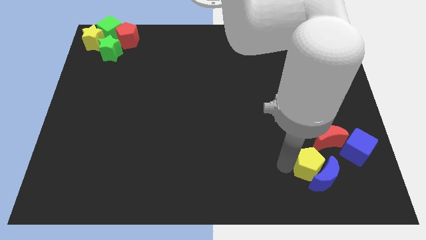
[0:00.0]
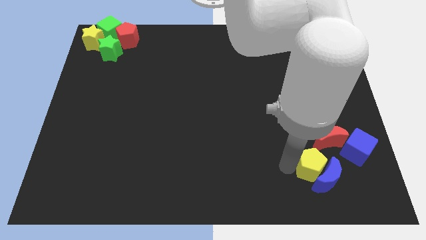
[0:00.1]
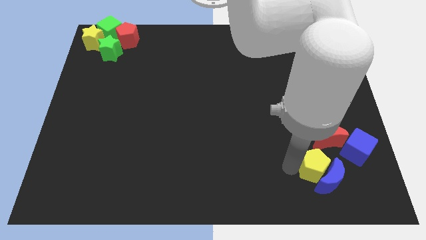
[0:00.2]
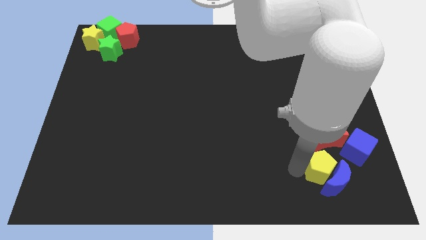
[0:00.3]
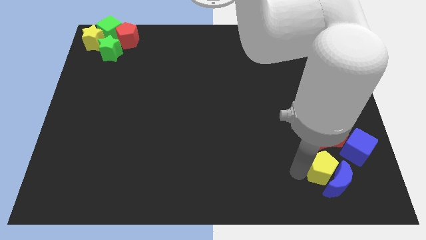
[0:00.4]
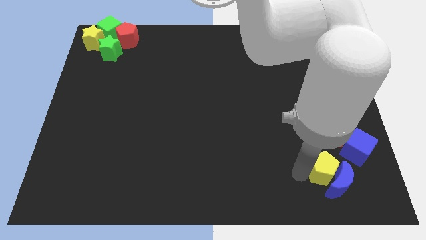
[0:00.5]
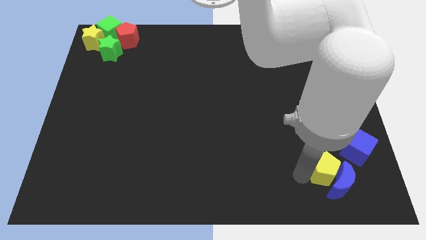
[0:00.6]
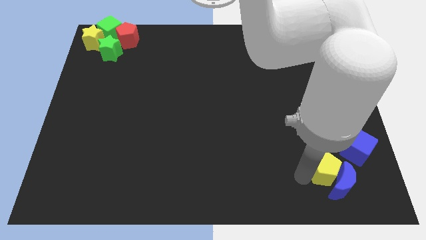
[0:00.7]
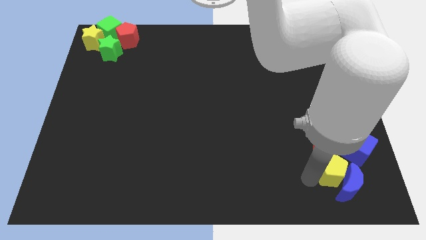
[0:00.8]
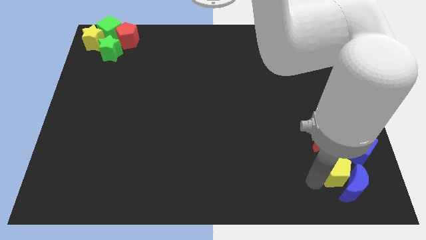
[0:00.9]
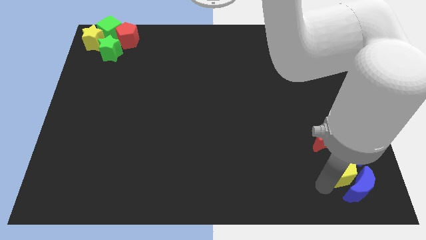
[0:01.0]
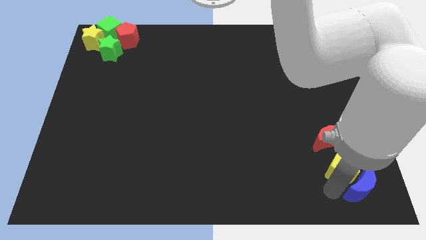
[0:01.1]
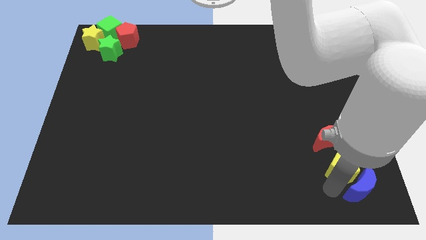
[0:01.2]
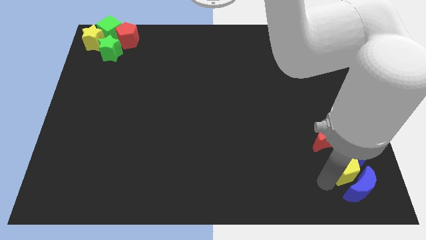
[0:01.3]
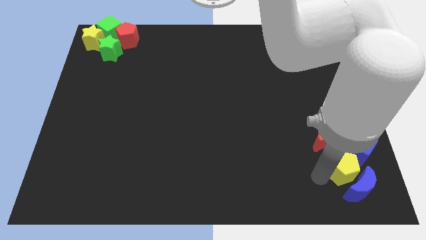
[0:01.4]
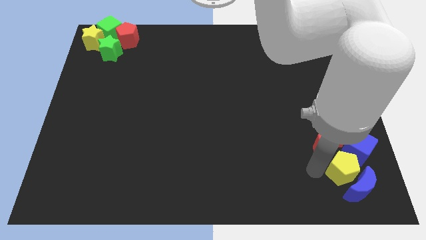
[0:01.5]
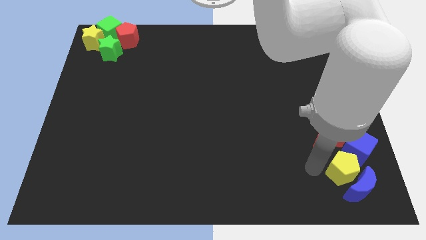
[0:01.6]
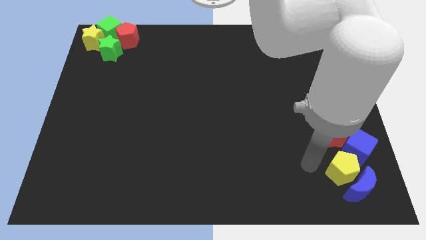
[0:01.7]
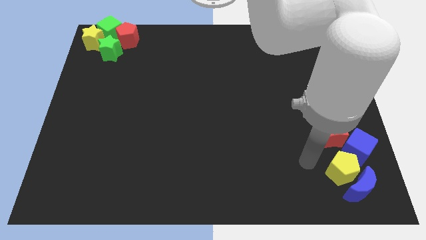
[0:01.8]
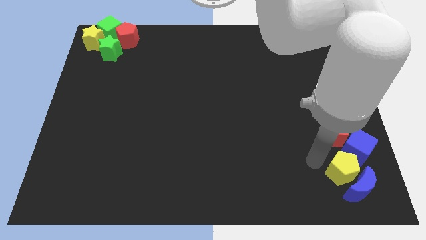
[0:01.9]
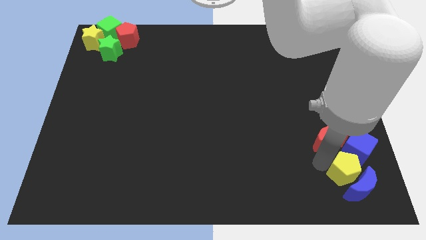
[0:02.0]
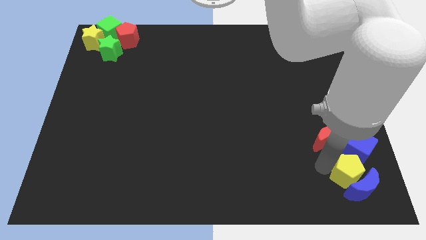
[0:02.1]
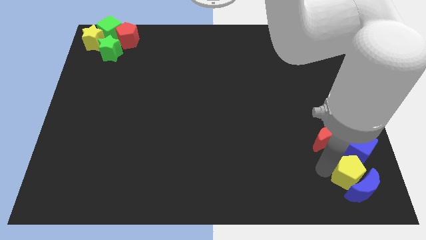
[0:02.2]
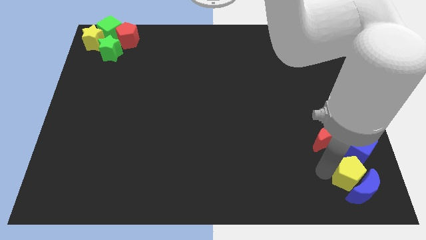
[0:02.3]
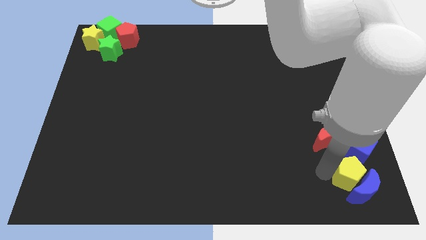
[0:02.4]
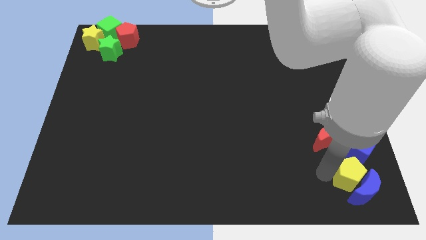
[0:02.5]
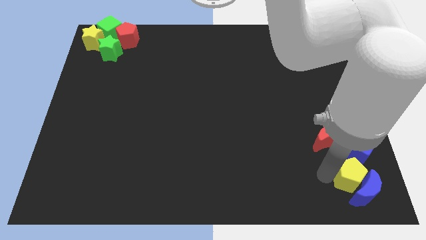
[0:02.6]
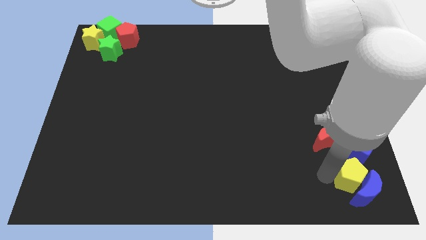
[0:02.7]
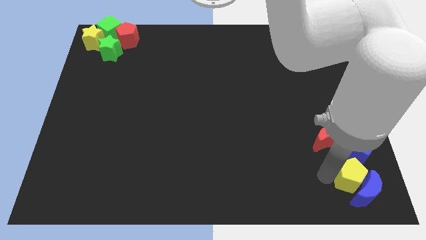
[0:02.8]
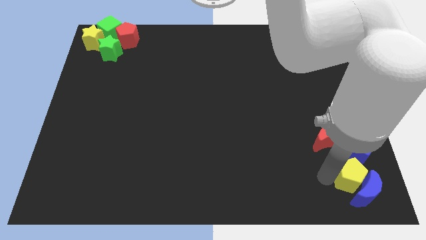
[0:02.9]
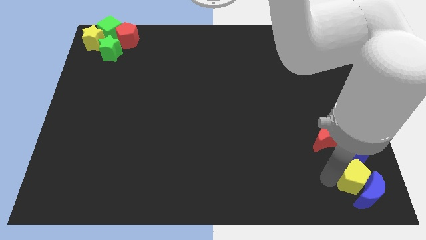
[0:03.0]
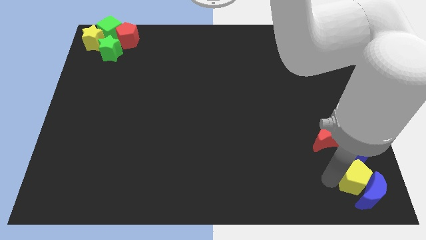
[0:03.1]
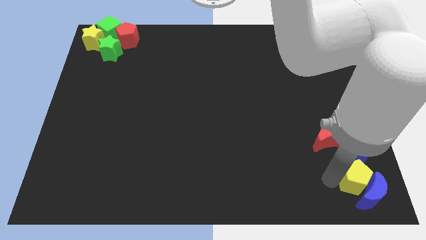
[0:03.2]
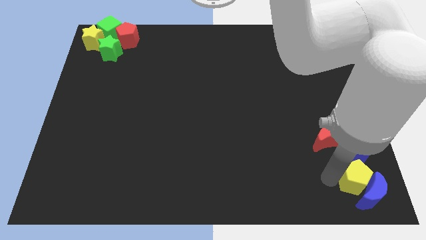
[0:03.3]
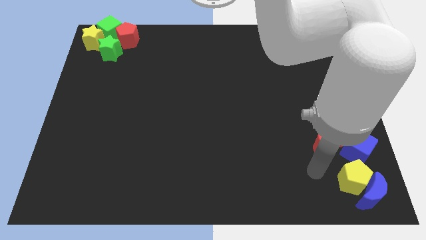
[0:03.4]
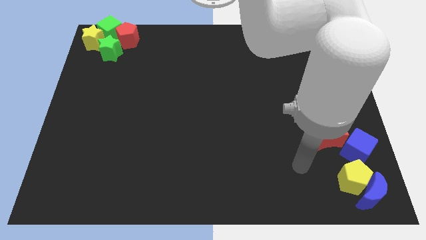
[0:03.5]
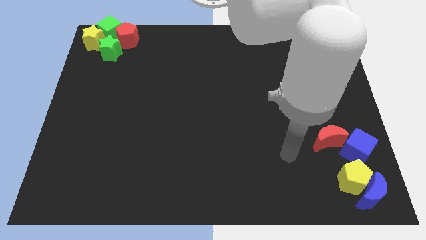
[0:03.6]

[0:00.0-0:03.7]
move the blue moon and yellow pentagon to the bottom right corner of the board

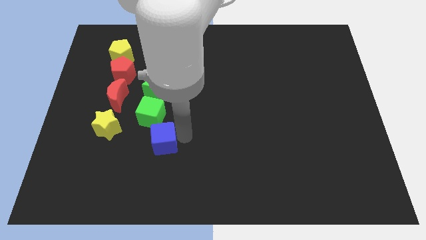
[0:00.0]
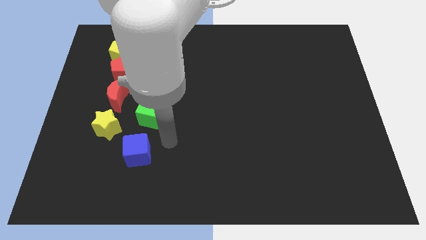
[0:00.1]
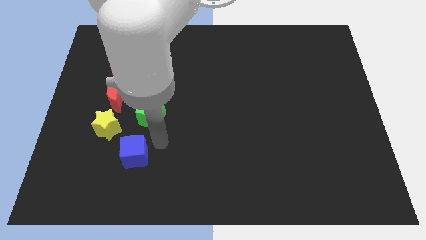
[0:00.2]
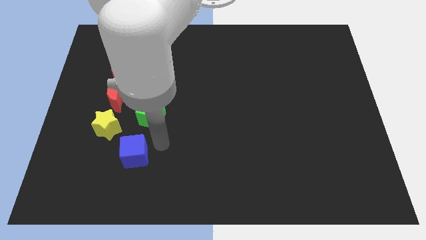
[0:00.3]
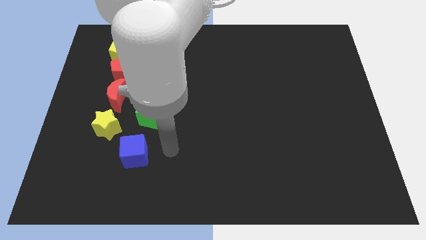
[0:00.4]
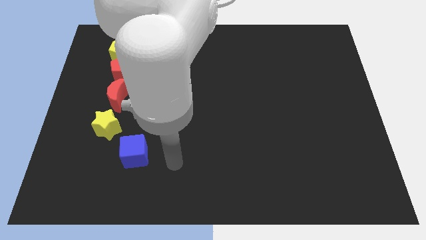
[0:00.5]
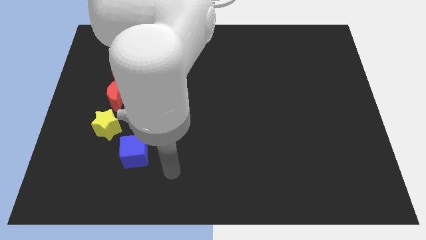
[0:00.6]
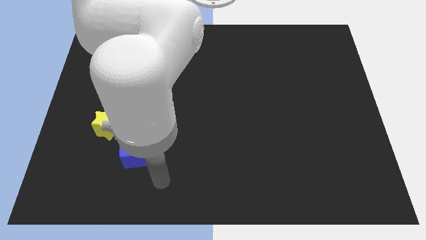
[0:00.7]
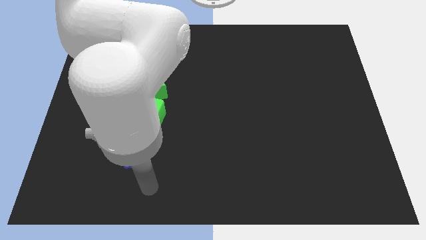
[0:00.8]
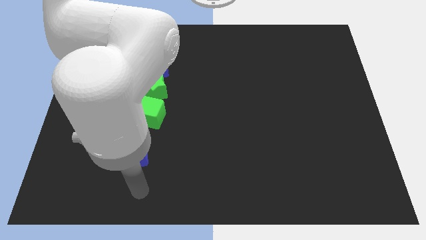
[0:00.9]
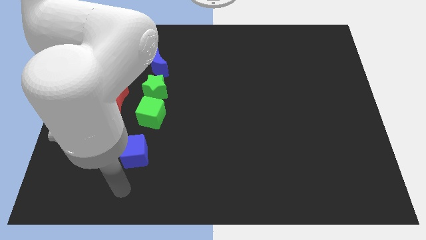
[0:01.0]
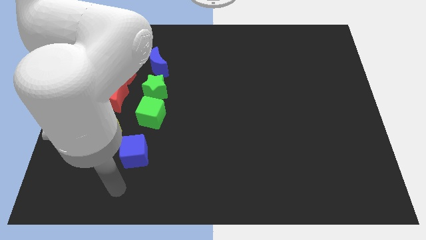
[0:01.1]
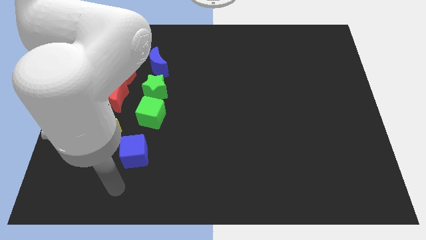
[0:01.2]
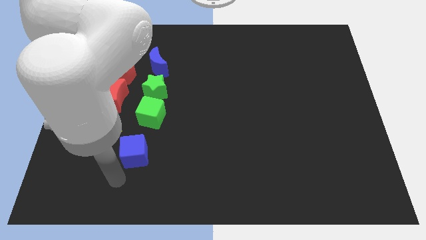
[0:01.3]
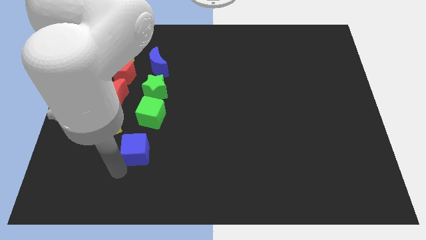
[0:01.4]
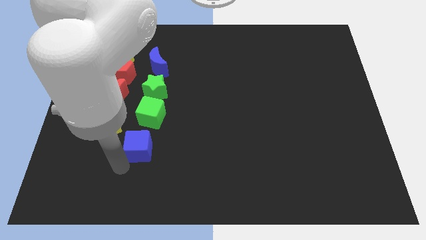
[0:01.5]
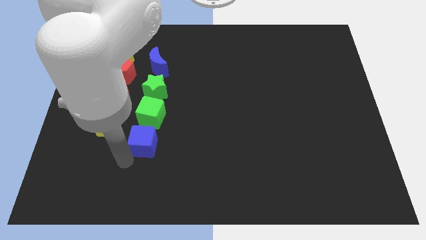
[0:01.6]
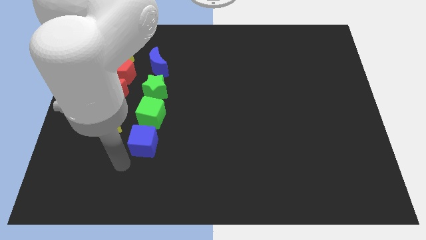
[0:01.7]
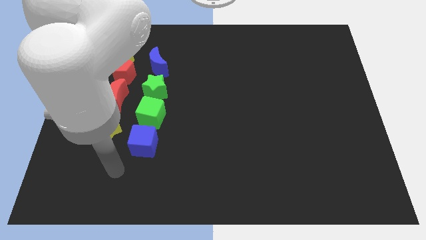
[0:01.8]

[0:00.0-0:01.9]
place blue cube below the green cube

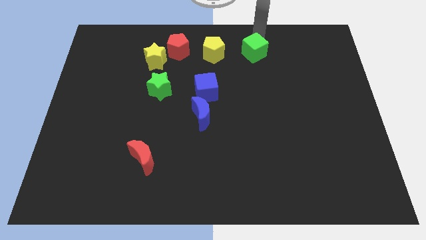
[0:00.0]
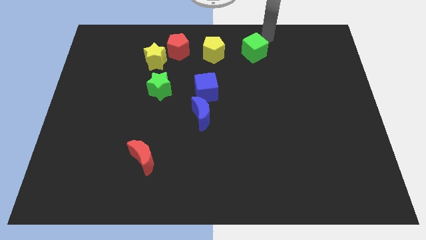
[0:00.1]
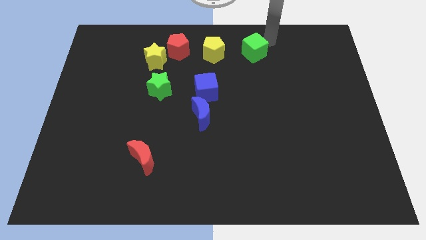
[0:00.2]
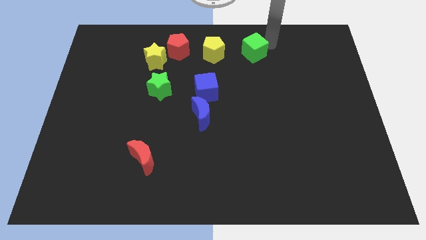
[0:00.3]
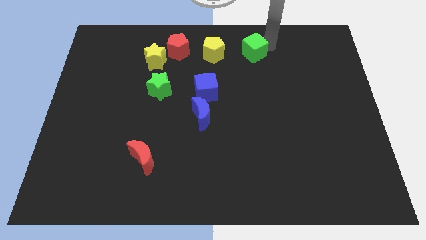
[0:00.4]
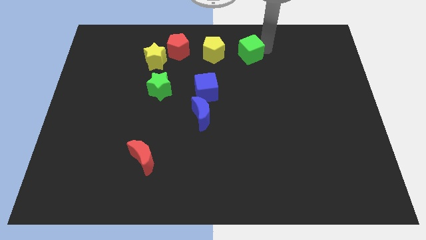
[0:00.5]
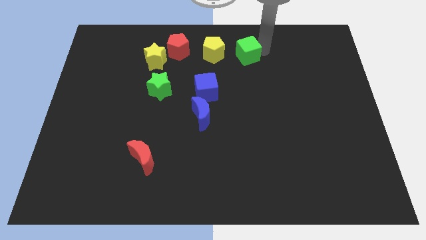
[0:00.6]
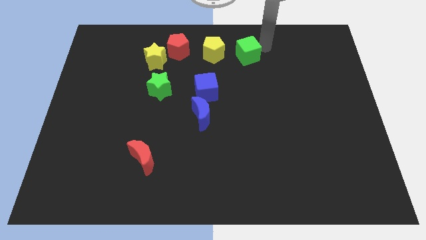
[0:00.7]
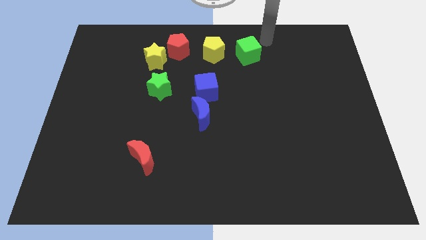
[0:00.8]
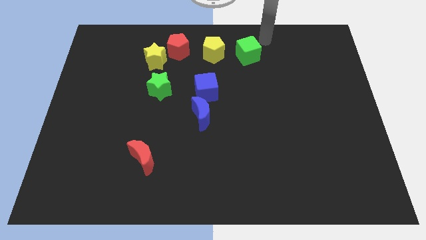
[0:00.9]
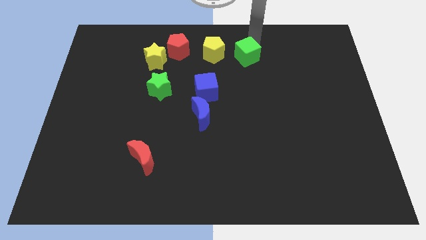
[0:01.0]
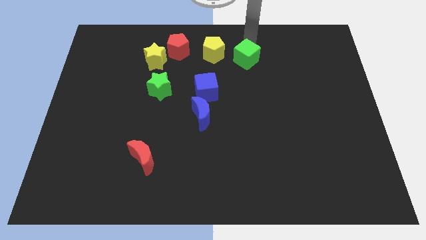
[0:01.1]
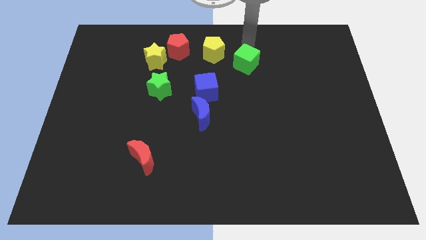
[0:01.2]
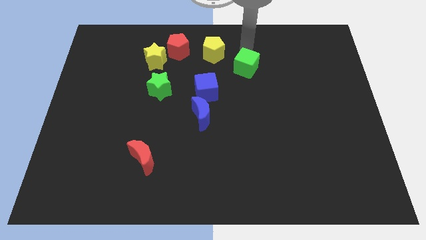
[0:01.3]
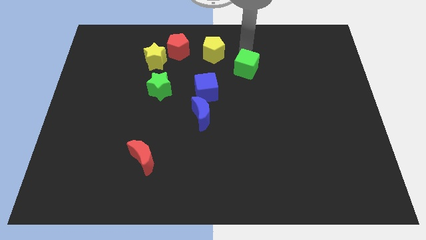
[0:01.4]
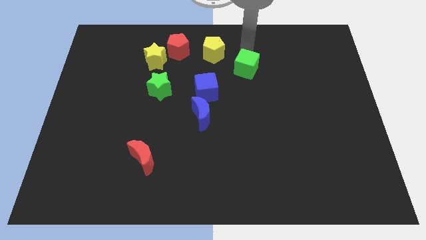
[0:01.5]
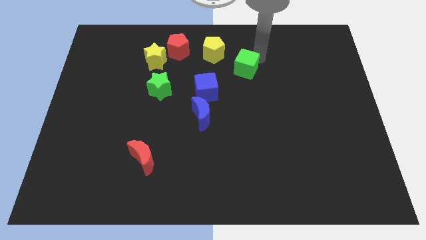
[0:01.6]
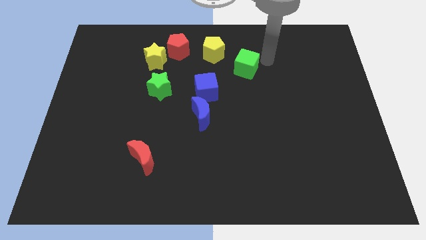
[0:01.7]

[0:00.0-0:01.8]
push green cube slightly downwards

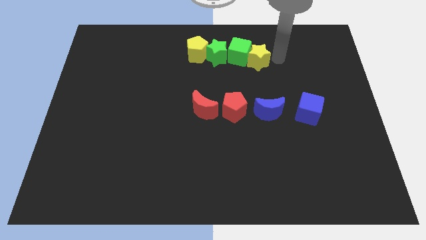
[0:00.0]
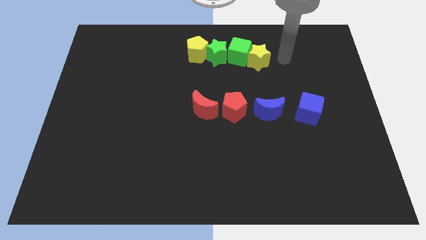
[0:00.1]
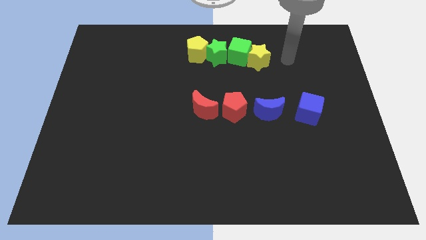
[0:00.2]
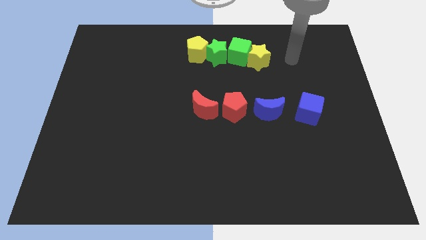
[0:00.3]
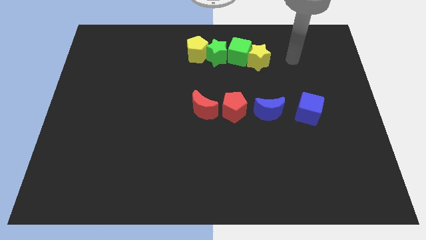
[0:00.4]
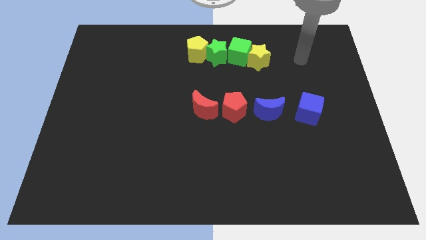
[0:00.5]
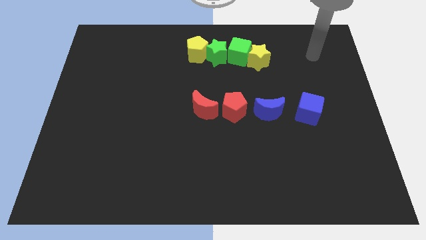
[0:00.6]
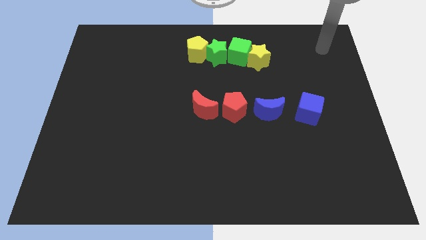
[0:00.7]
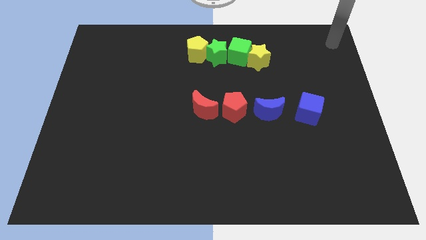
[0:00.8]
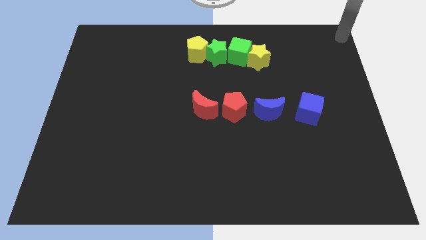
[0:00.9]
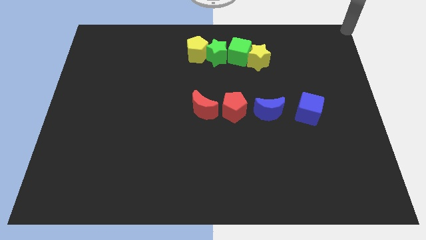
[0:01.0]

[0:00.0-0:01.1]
move the arm away from the yellow star

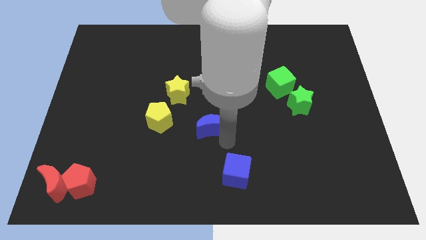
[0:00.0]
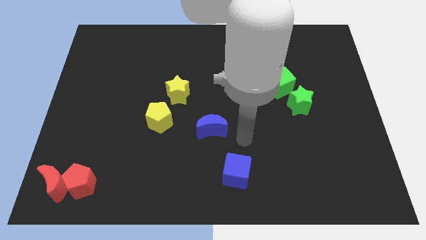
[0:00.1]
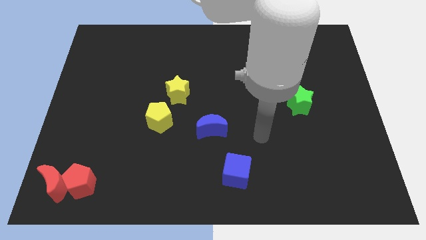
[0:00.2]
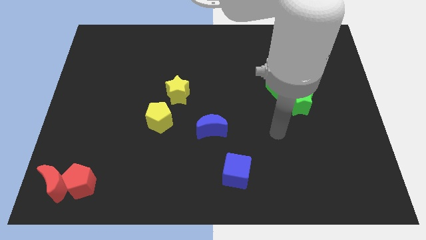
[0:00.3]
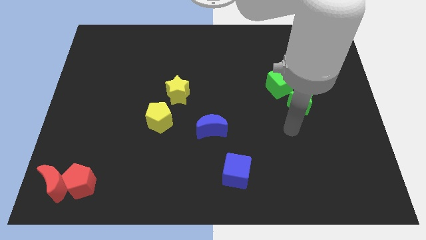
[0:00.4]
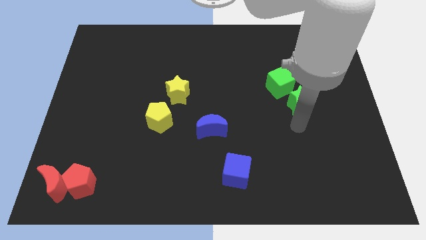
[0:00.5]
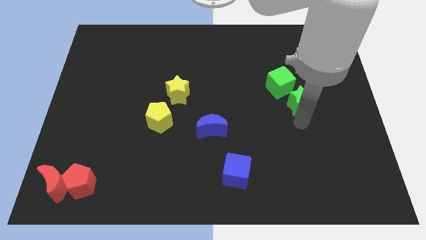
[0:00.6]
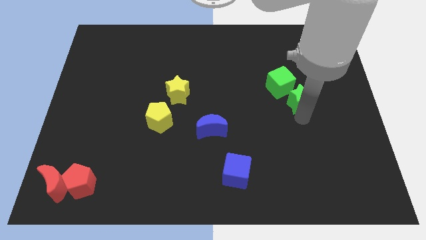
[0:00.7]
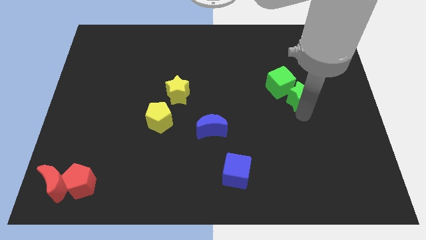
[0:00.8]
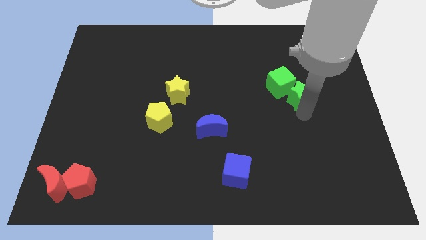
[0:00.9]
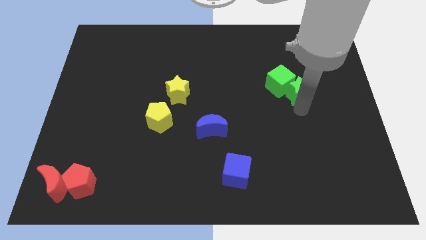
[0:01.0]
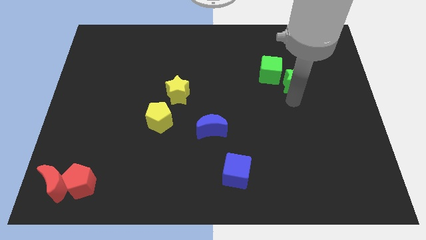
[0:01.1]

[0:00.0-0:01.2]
push the green star into the right side of the green cube
